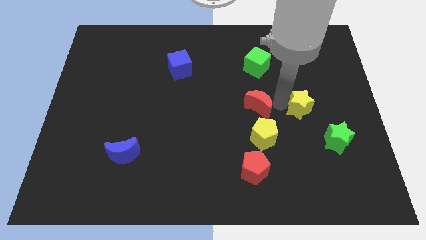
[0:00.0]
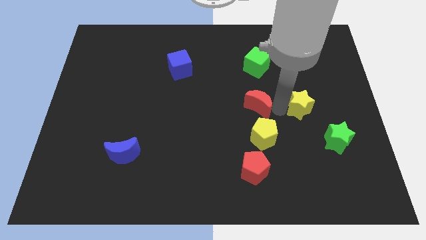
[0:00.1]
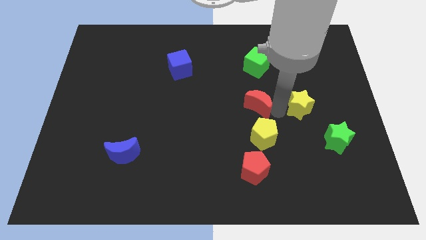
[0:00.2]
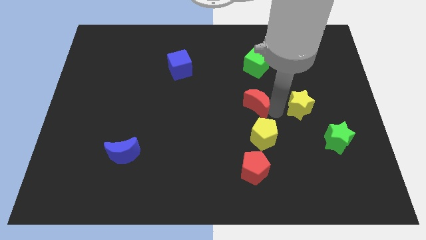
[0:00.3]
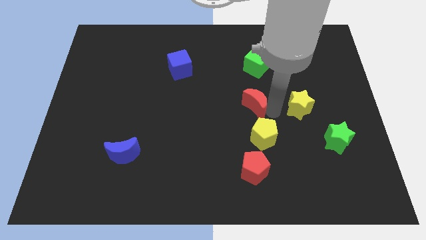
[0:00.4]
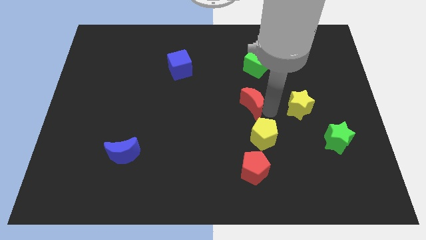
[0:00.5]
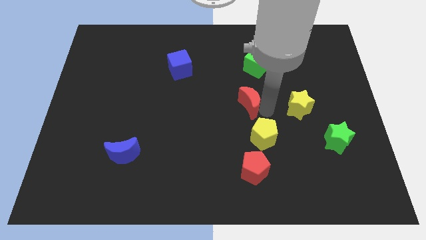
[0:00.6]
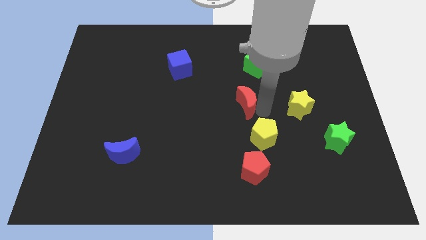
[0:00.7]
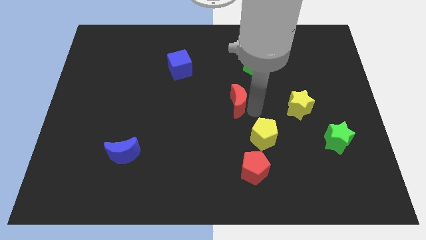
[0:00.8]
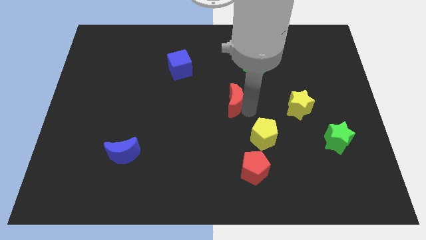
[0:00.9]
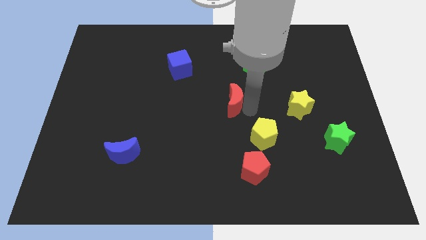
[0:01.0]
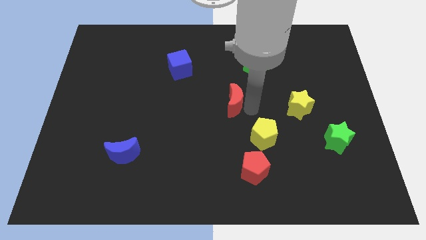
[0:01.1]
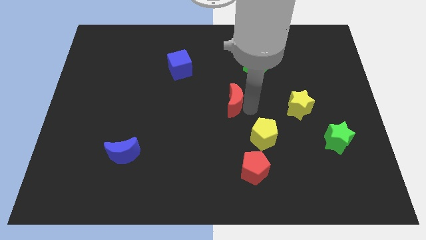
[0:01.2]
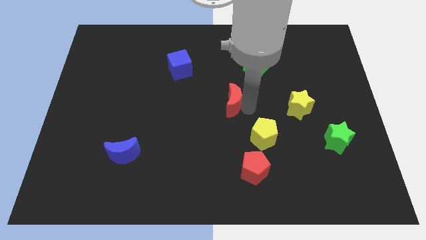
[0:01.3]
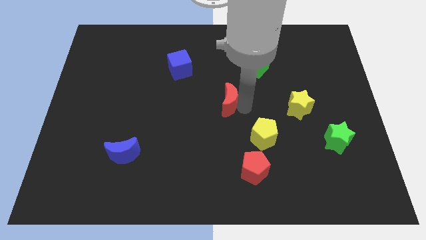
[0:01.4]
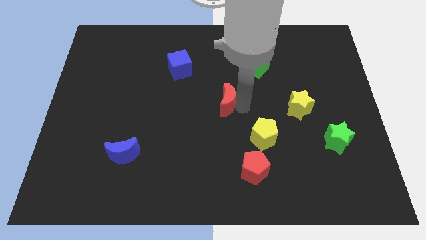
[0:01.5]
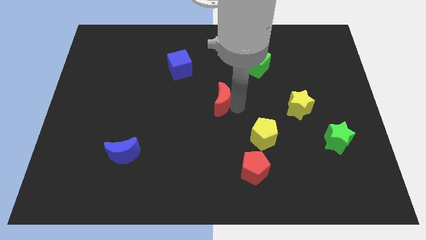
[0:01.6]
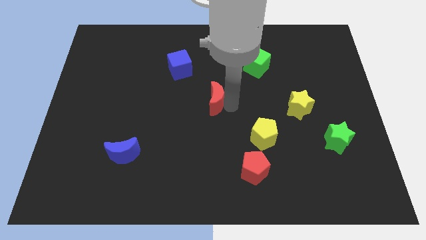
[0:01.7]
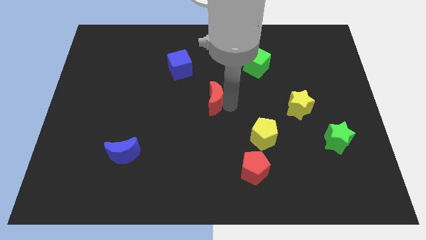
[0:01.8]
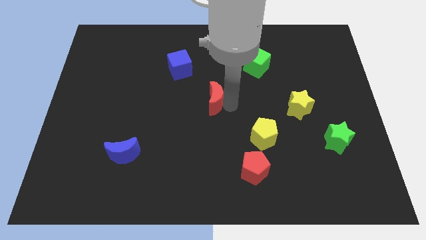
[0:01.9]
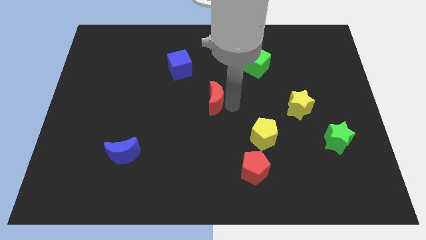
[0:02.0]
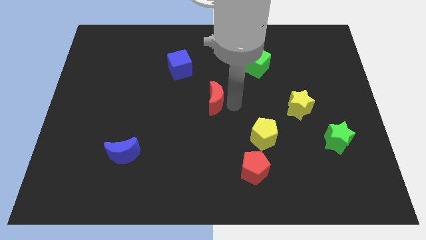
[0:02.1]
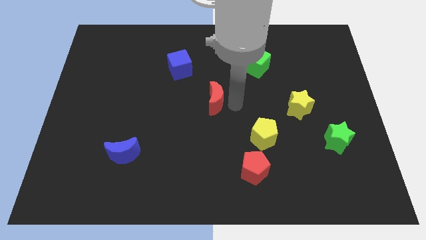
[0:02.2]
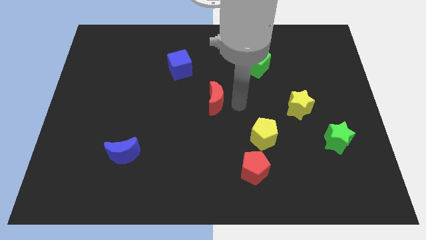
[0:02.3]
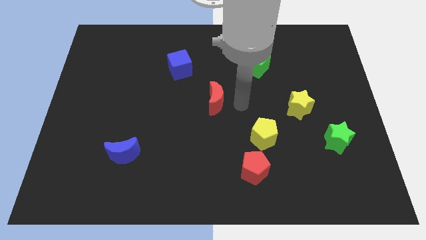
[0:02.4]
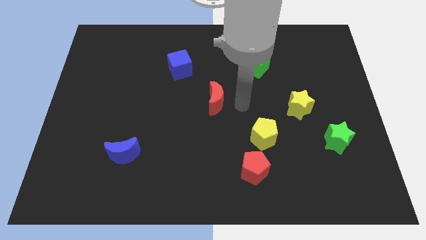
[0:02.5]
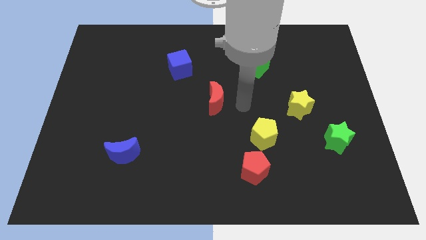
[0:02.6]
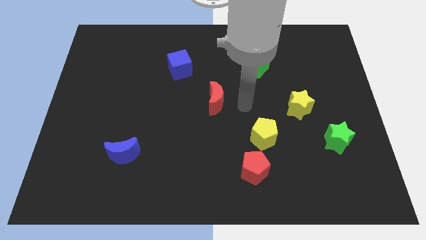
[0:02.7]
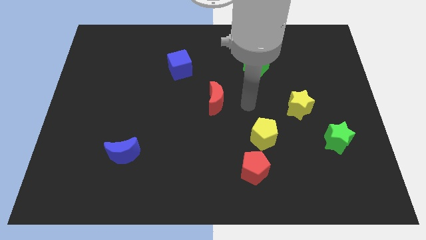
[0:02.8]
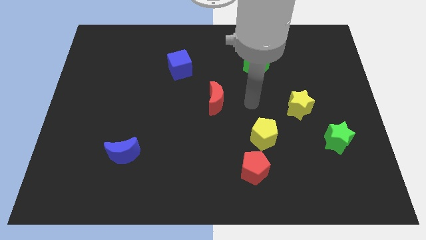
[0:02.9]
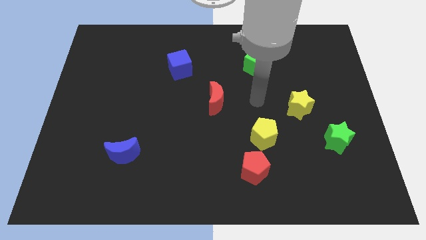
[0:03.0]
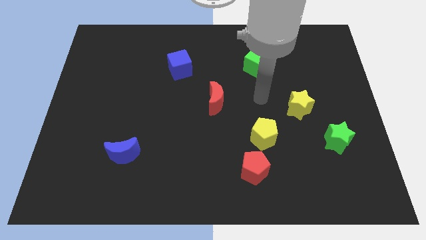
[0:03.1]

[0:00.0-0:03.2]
move the red crescent to the center of the board

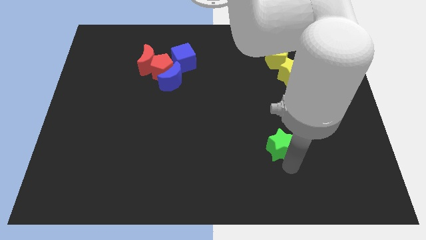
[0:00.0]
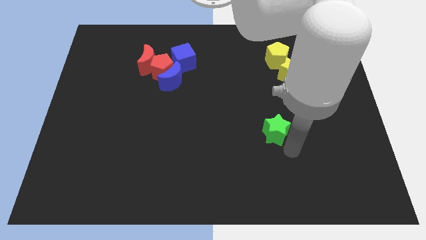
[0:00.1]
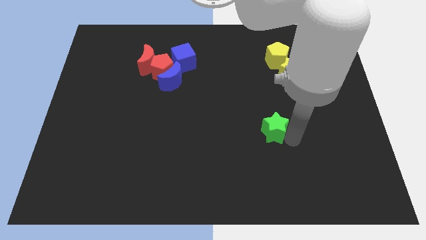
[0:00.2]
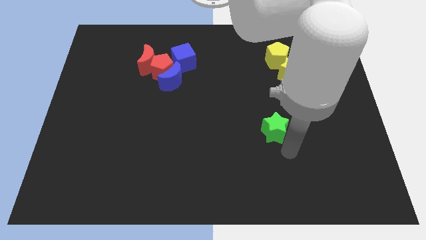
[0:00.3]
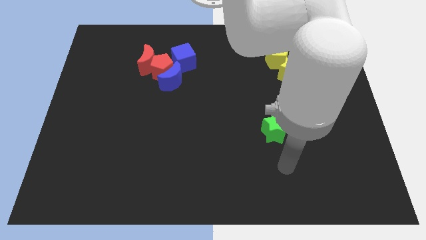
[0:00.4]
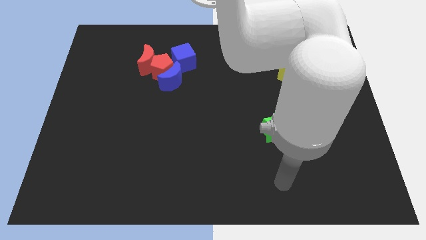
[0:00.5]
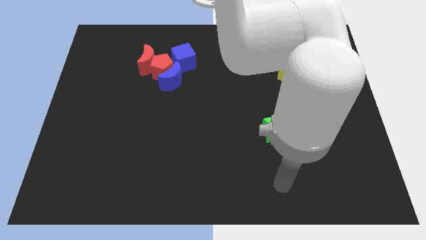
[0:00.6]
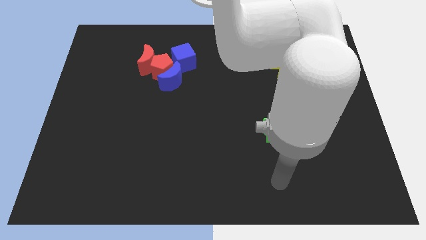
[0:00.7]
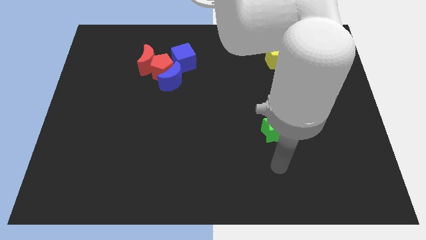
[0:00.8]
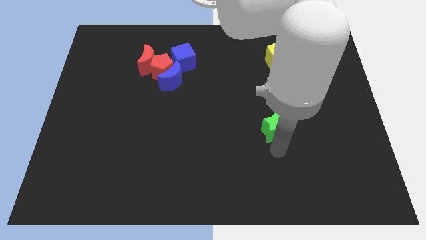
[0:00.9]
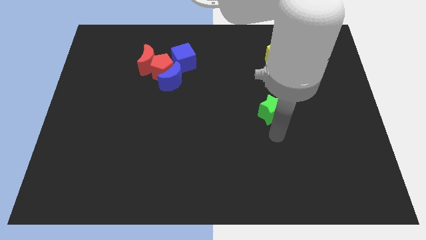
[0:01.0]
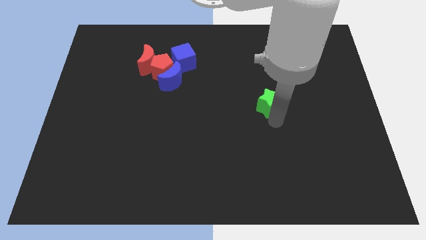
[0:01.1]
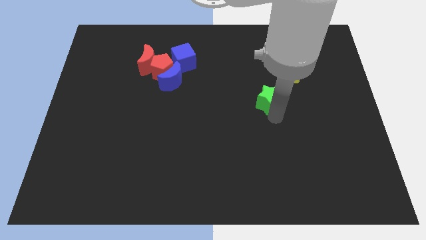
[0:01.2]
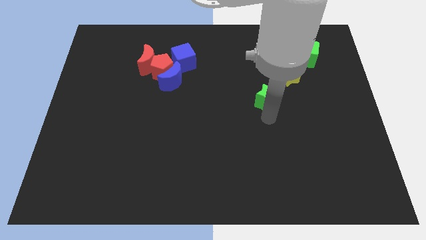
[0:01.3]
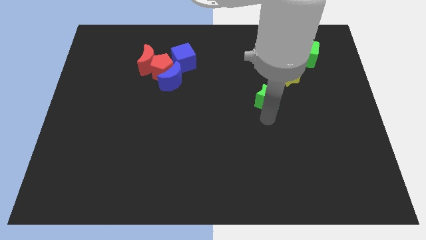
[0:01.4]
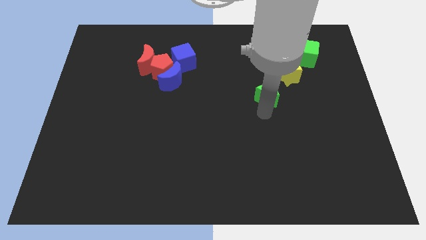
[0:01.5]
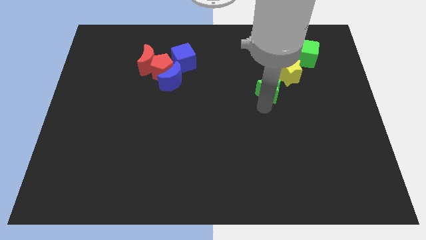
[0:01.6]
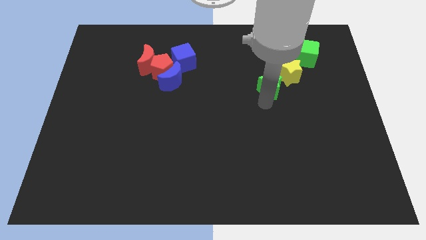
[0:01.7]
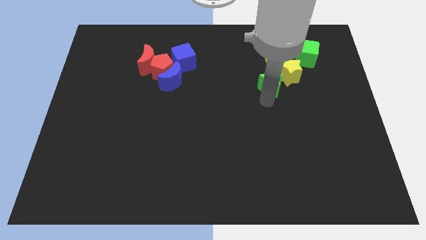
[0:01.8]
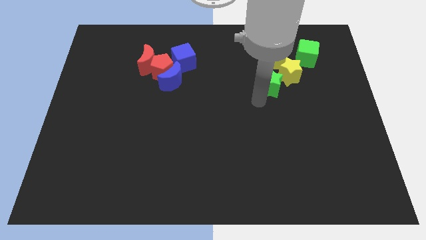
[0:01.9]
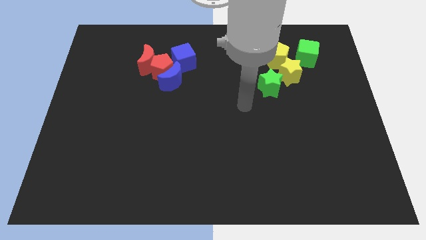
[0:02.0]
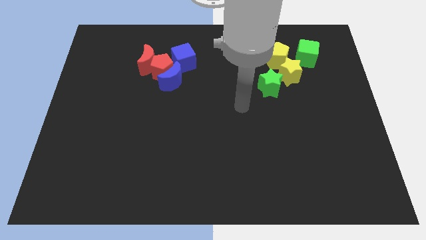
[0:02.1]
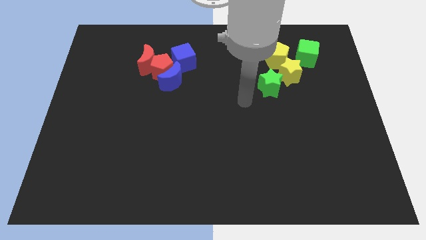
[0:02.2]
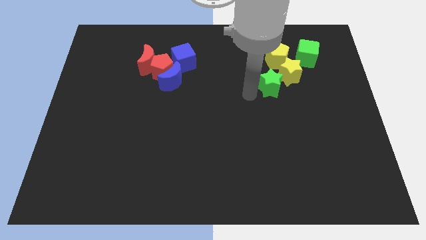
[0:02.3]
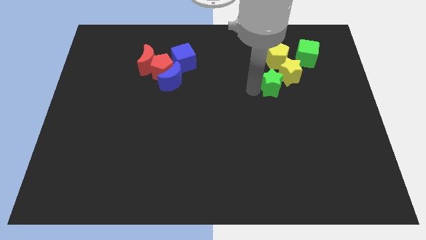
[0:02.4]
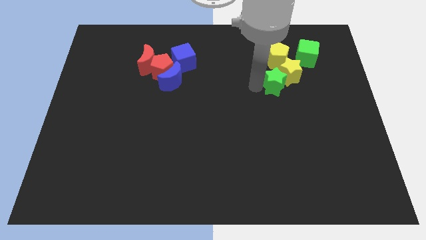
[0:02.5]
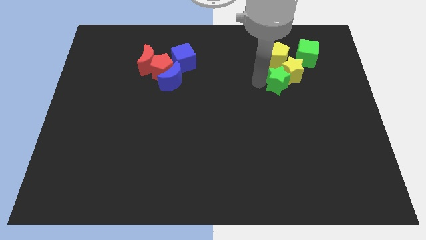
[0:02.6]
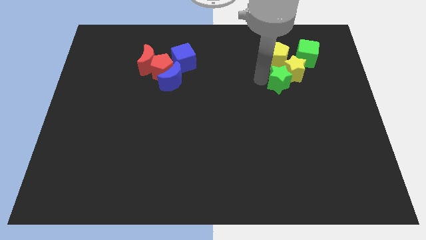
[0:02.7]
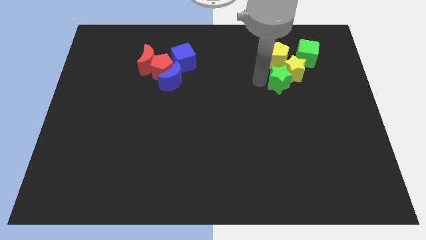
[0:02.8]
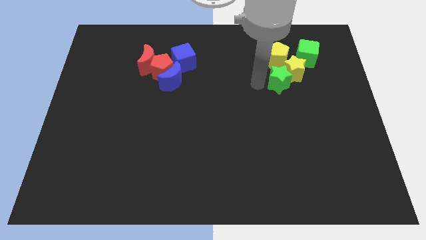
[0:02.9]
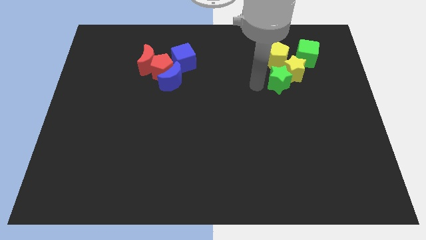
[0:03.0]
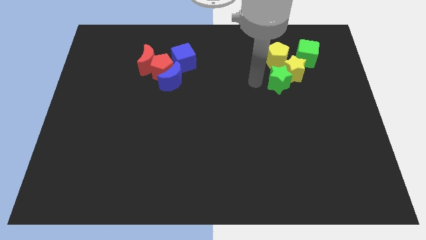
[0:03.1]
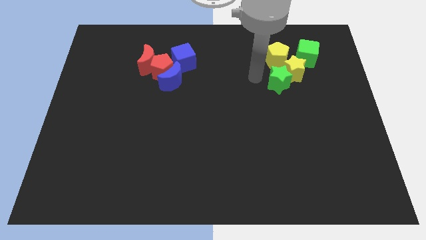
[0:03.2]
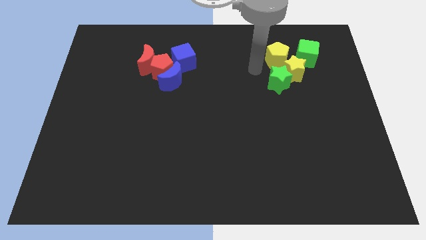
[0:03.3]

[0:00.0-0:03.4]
push the green star close to the yellow star

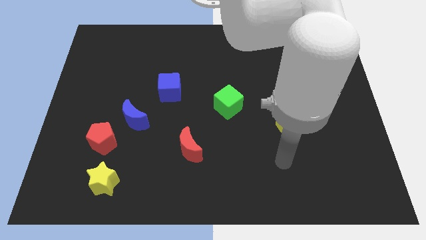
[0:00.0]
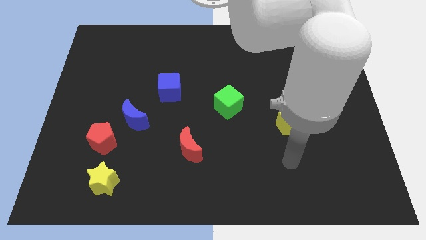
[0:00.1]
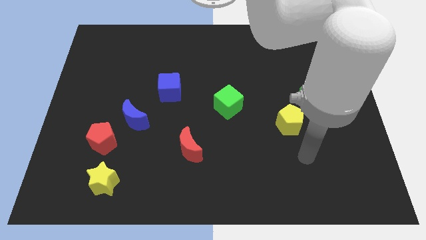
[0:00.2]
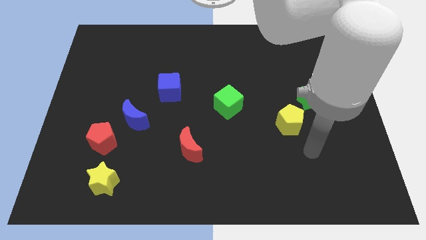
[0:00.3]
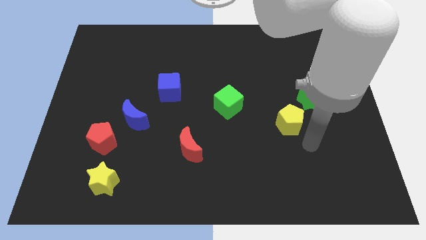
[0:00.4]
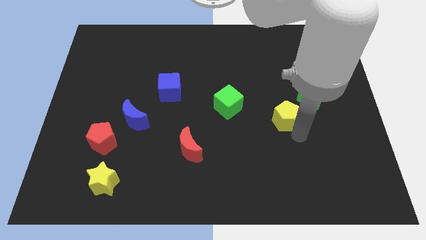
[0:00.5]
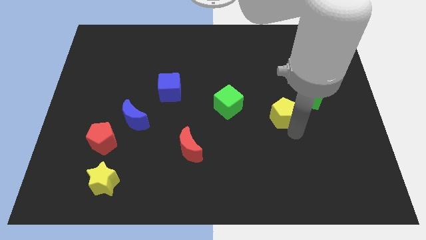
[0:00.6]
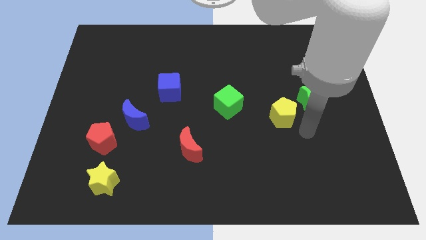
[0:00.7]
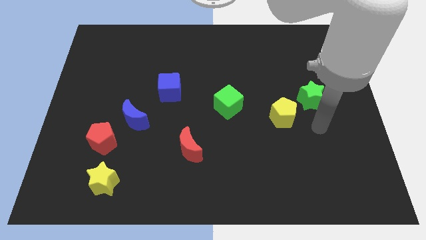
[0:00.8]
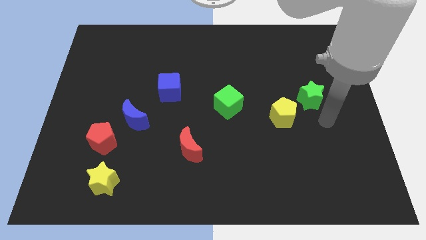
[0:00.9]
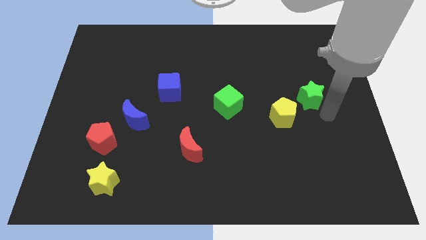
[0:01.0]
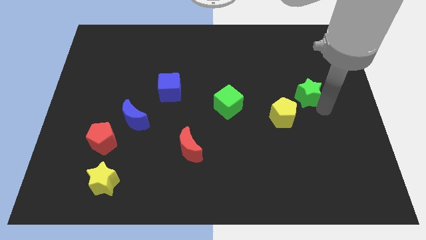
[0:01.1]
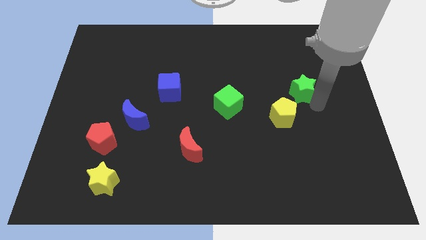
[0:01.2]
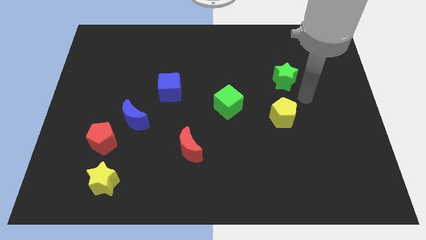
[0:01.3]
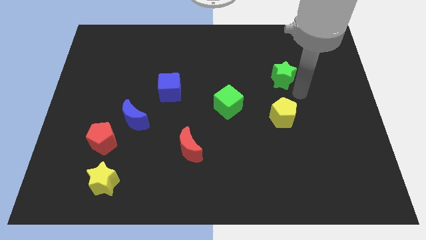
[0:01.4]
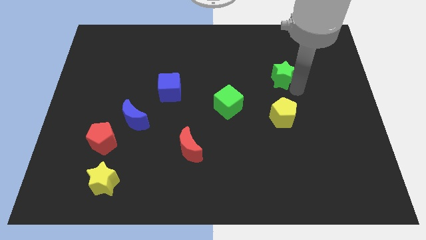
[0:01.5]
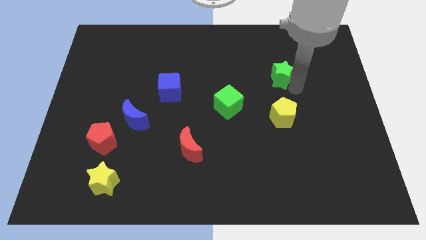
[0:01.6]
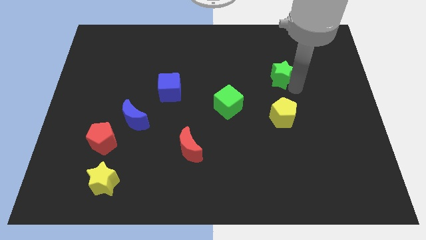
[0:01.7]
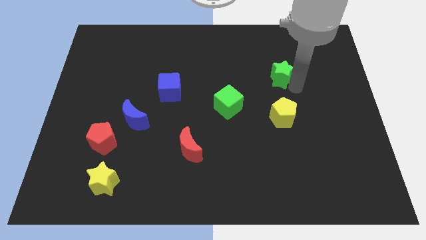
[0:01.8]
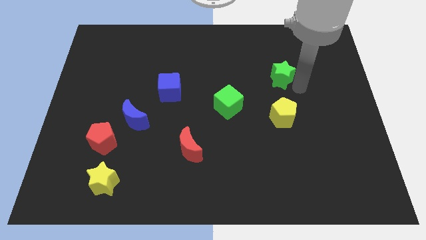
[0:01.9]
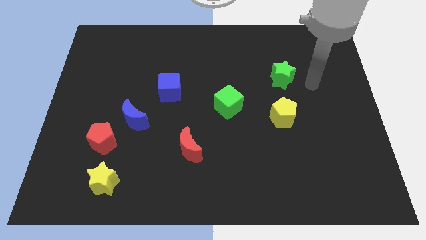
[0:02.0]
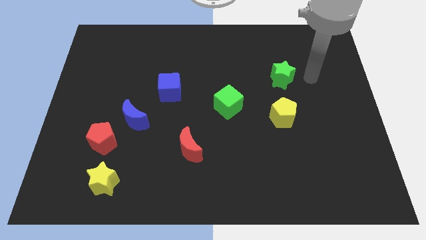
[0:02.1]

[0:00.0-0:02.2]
move the green star to the left side slightly

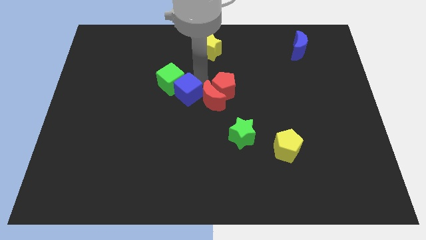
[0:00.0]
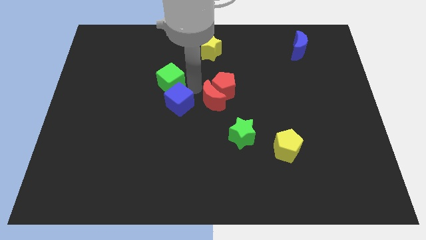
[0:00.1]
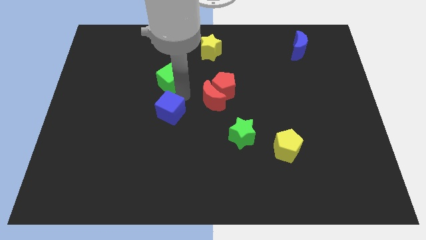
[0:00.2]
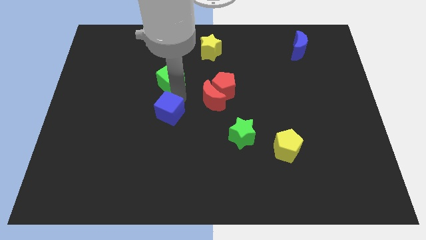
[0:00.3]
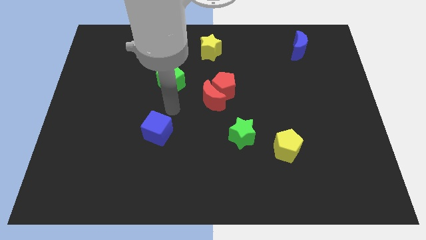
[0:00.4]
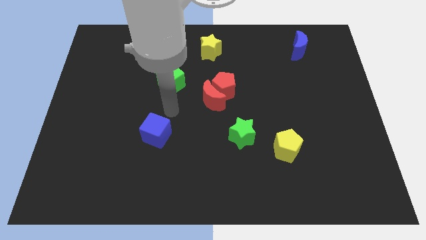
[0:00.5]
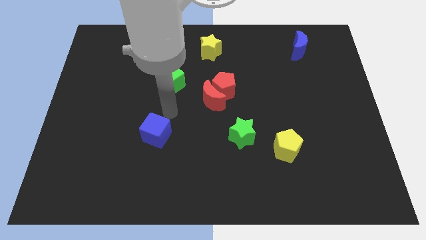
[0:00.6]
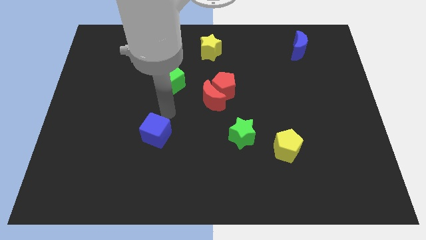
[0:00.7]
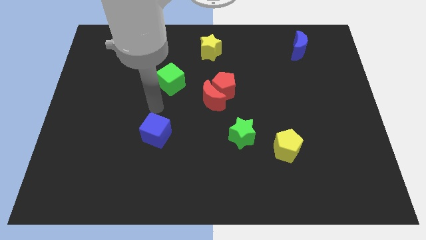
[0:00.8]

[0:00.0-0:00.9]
move the blue cube downwards below the green cube
